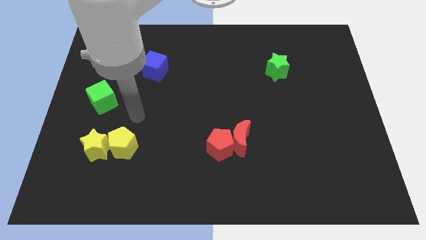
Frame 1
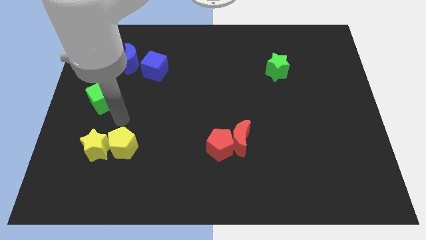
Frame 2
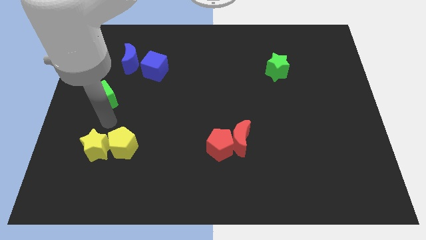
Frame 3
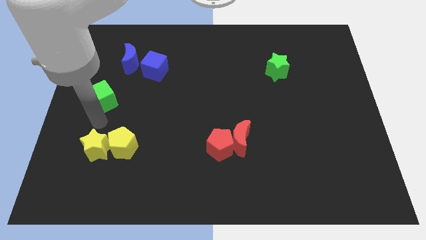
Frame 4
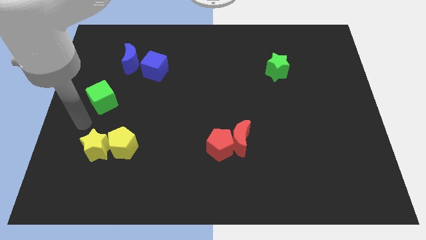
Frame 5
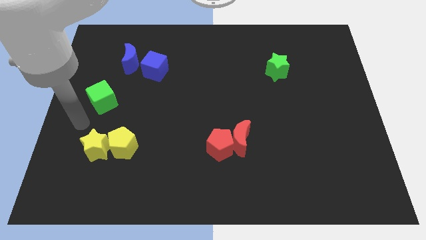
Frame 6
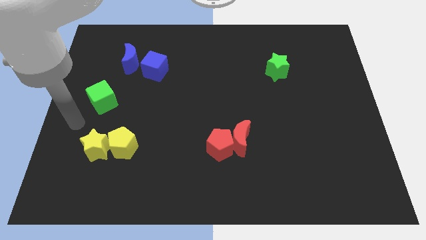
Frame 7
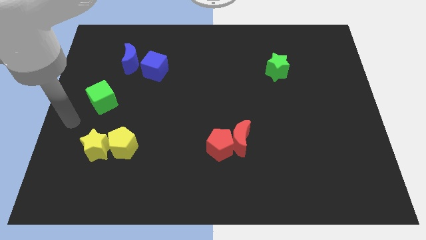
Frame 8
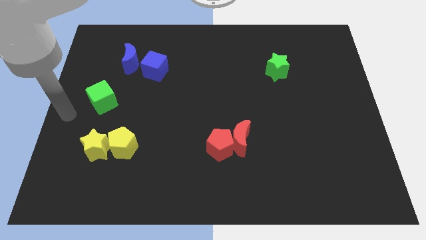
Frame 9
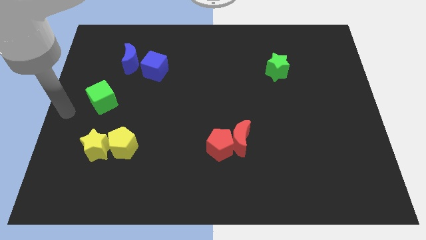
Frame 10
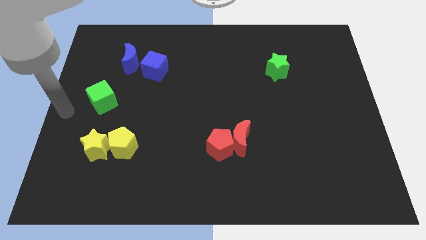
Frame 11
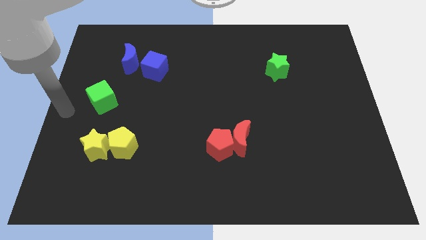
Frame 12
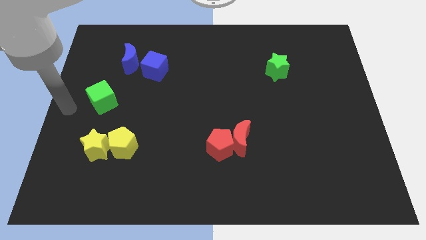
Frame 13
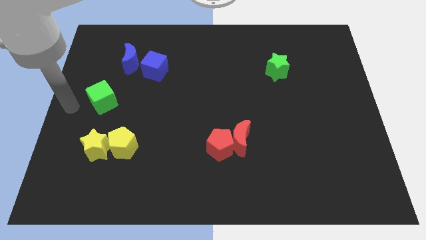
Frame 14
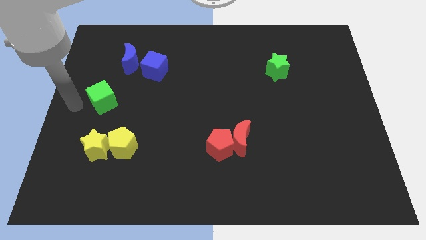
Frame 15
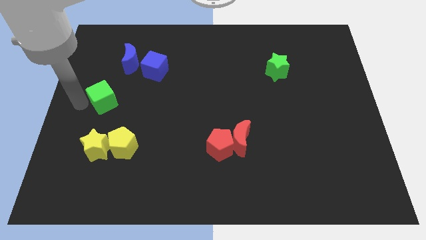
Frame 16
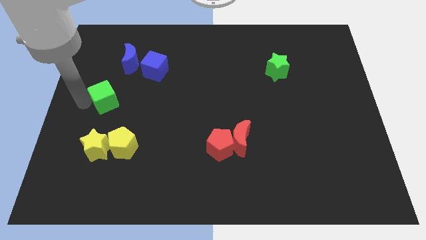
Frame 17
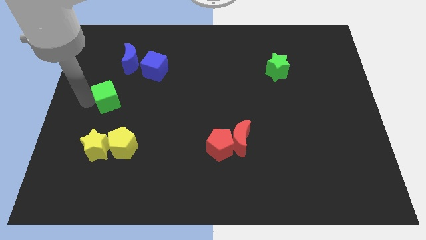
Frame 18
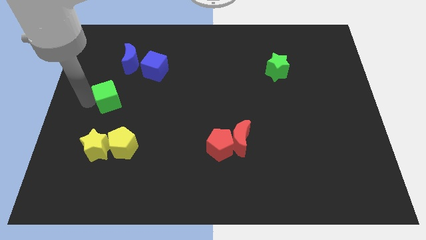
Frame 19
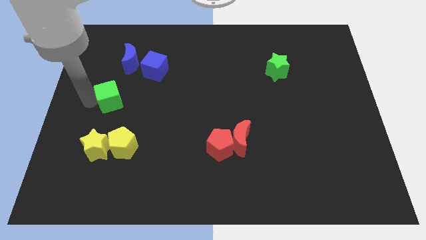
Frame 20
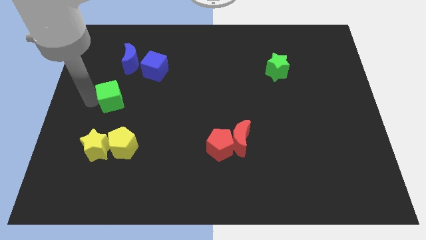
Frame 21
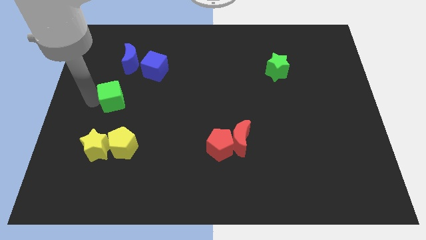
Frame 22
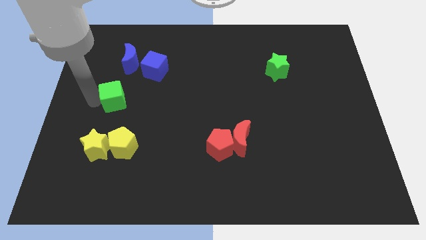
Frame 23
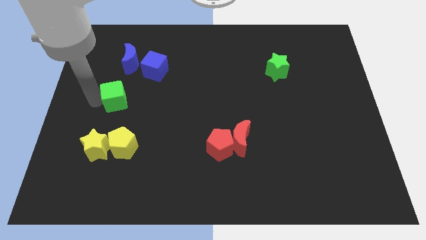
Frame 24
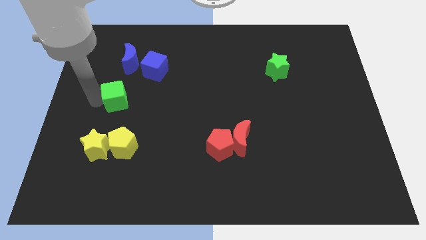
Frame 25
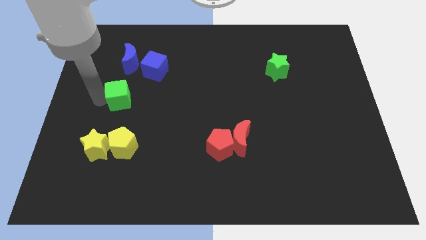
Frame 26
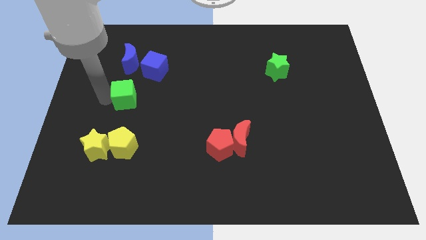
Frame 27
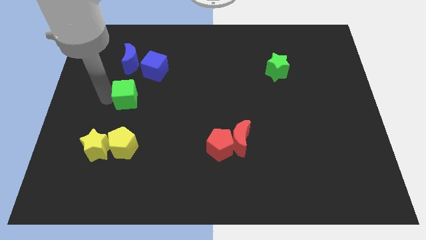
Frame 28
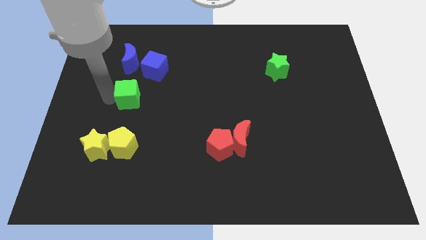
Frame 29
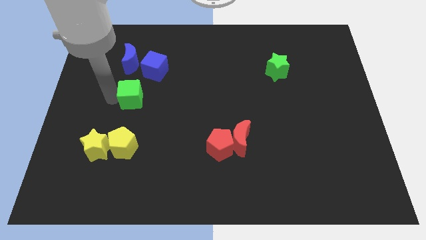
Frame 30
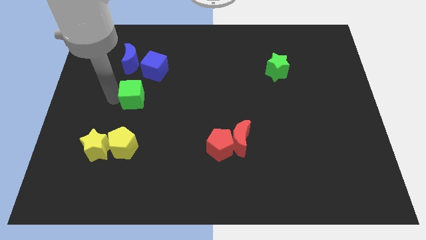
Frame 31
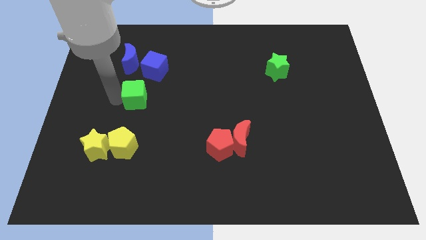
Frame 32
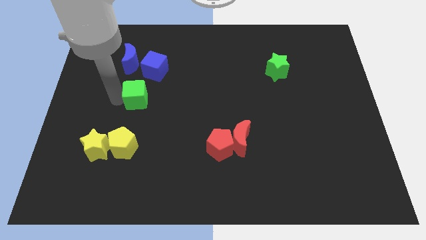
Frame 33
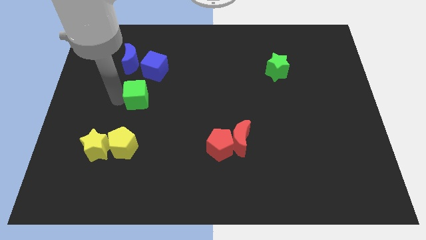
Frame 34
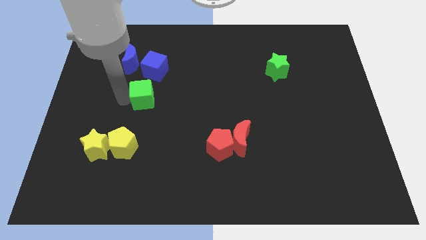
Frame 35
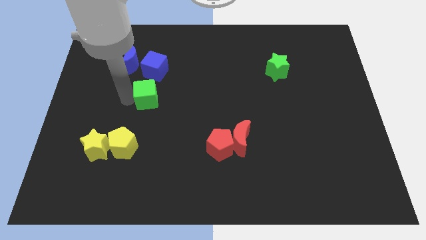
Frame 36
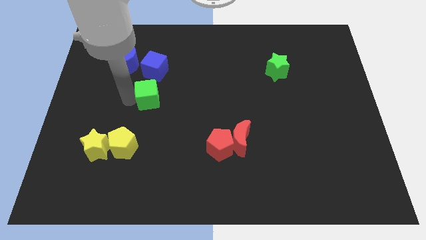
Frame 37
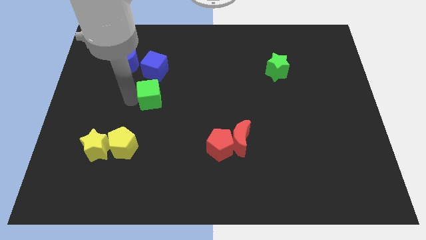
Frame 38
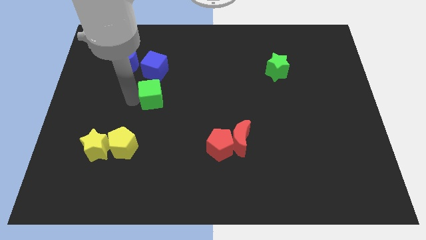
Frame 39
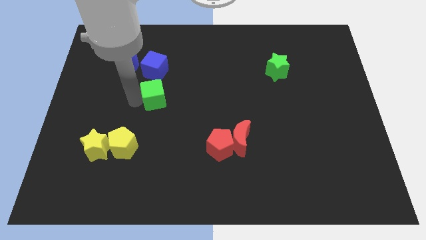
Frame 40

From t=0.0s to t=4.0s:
slide the green cube towards the centre of the board

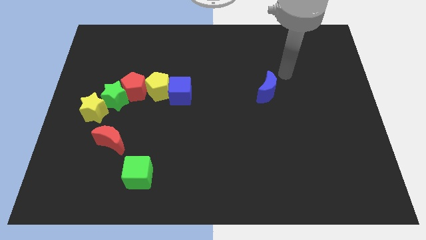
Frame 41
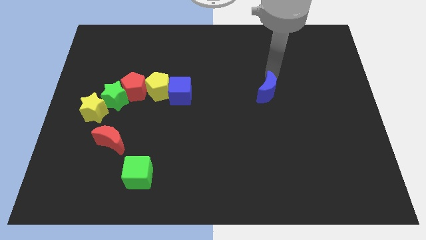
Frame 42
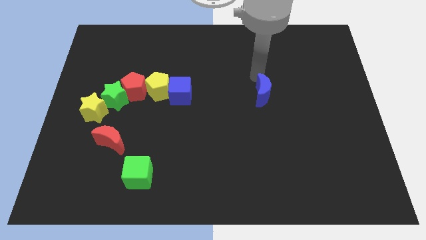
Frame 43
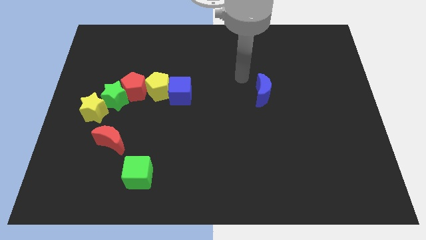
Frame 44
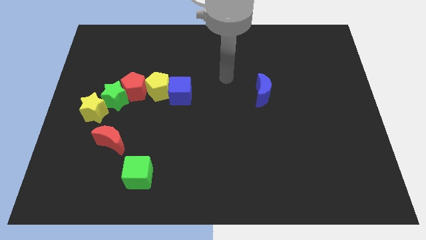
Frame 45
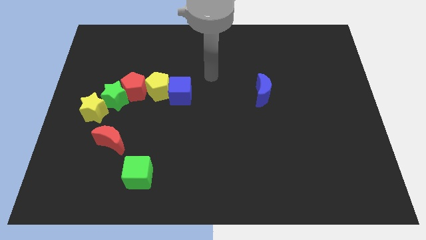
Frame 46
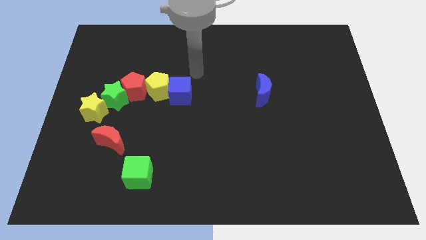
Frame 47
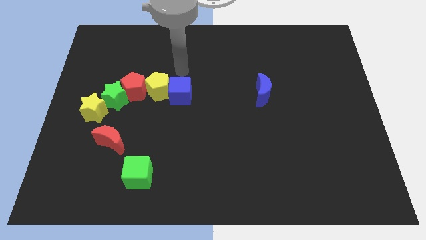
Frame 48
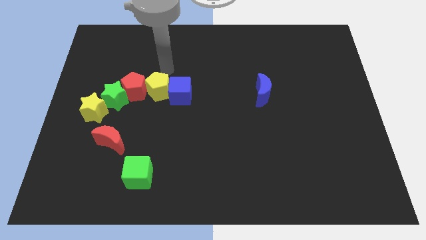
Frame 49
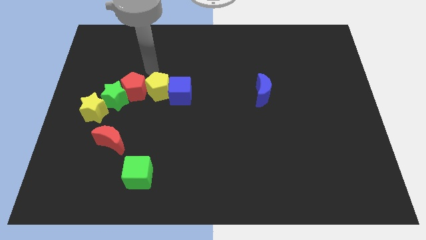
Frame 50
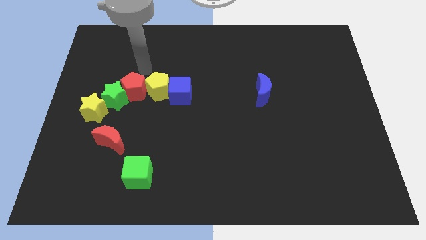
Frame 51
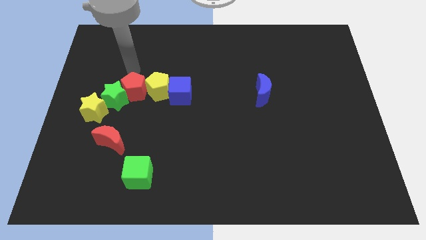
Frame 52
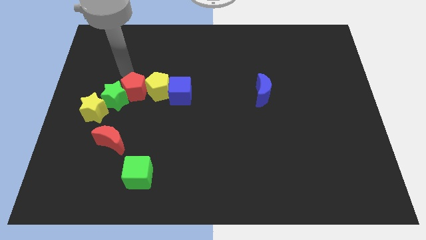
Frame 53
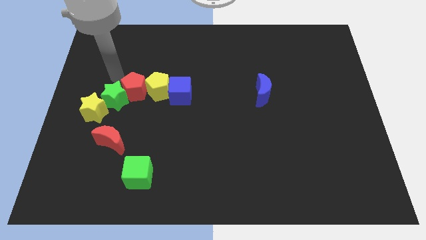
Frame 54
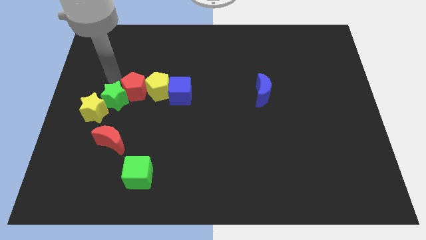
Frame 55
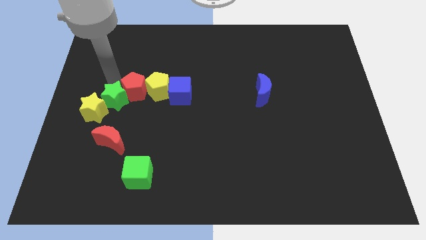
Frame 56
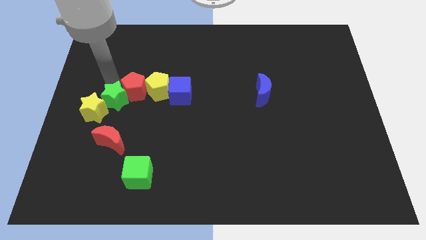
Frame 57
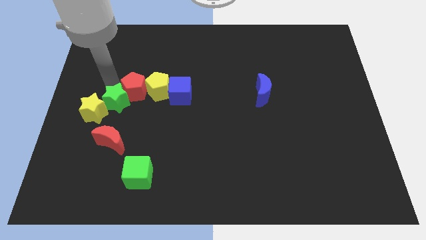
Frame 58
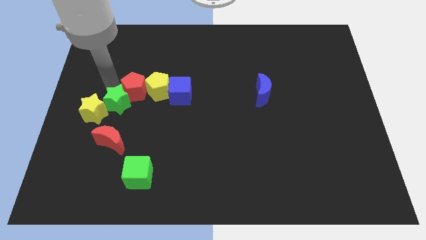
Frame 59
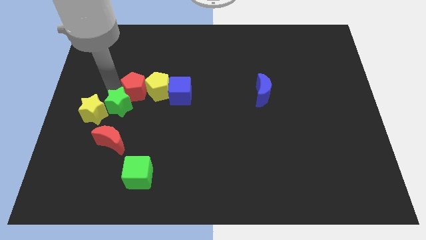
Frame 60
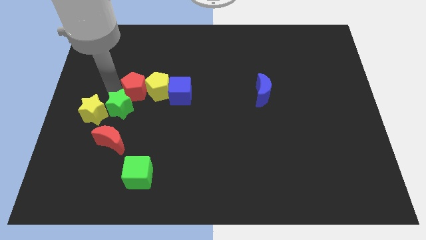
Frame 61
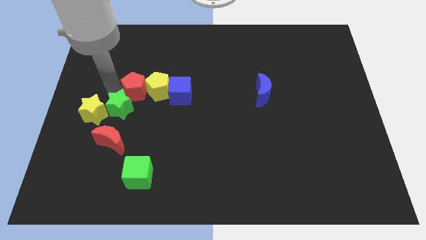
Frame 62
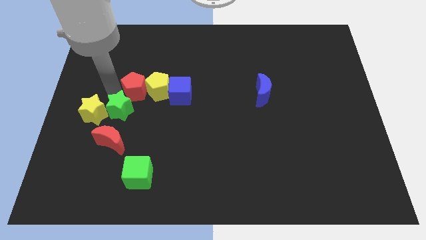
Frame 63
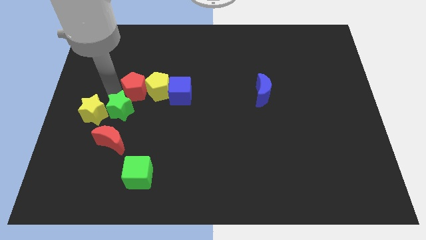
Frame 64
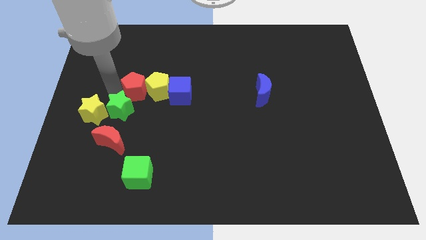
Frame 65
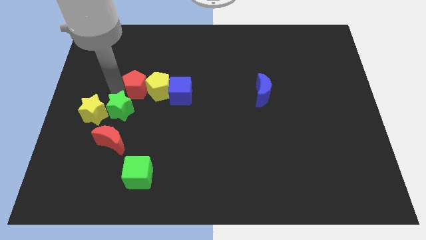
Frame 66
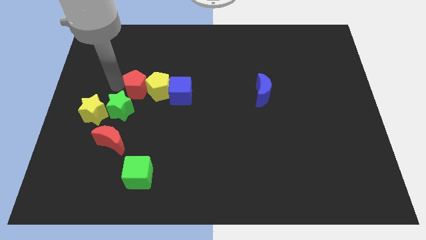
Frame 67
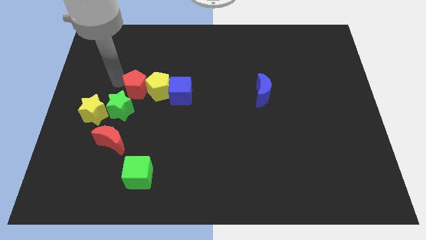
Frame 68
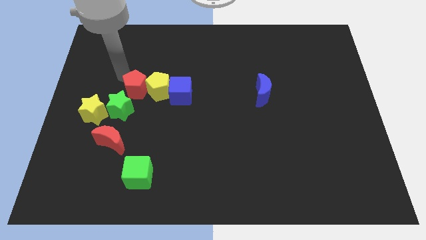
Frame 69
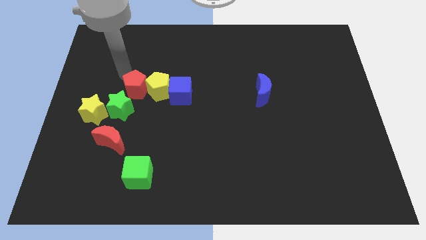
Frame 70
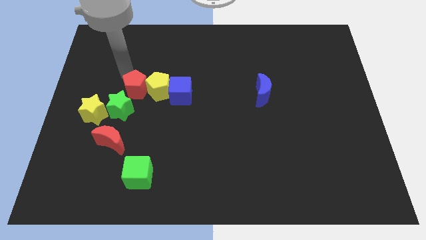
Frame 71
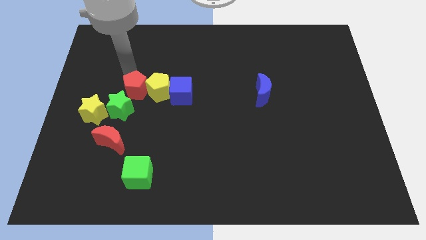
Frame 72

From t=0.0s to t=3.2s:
move the green star to the bottom left of the red pentagon

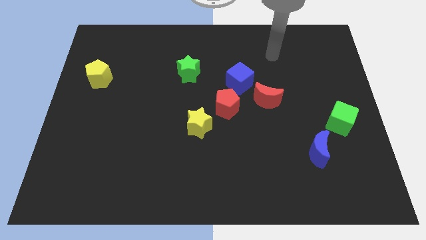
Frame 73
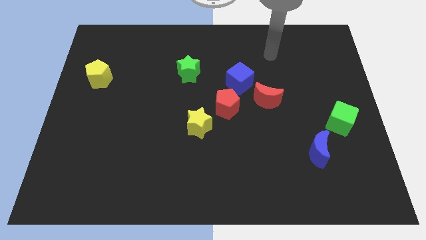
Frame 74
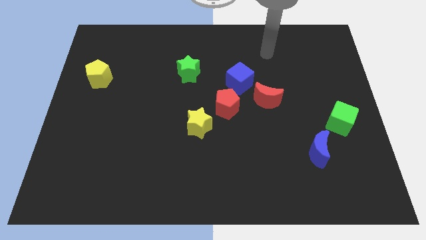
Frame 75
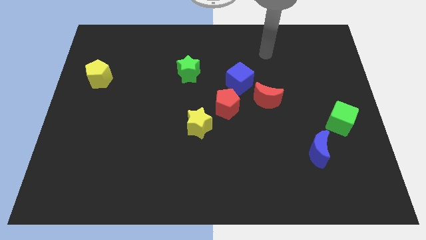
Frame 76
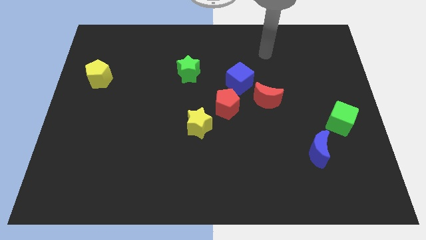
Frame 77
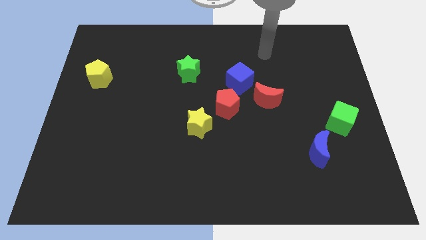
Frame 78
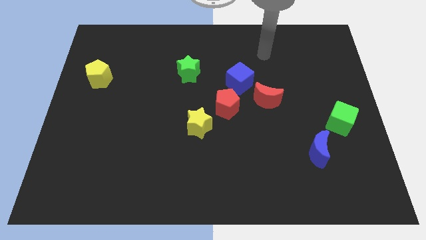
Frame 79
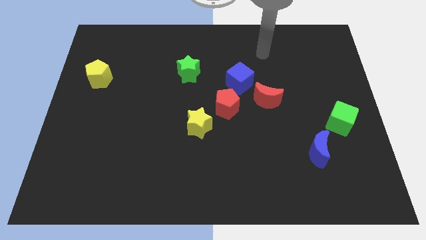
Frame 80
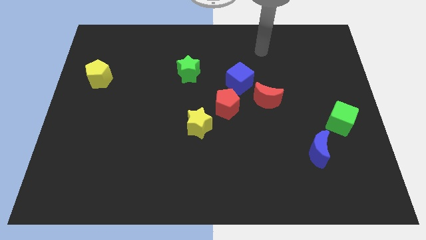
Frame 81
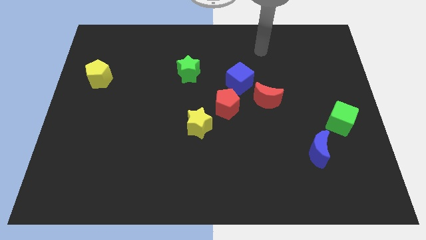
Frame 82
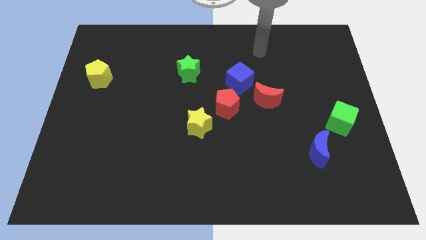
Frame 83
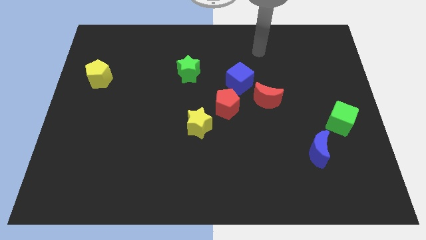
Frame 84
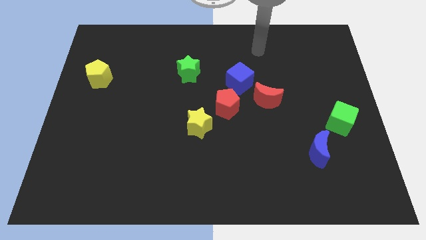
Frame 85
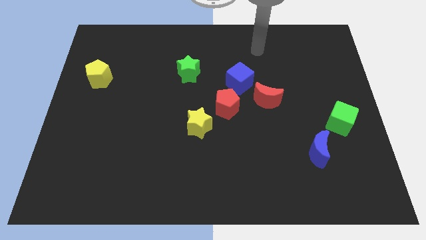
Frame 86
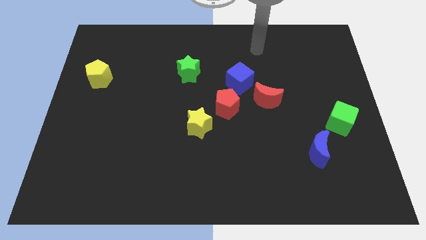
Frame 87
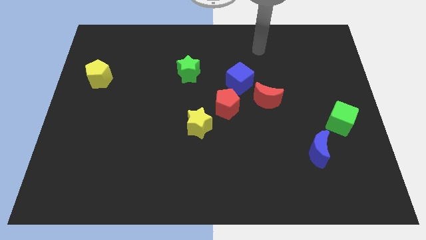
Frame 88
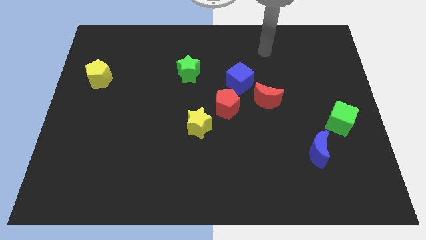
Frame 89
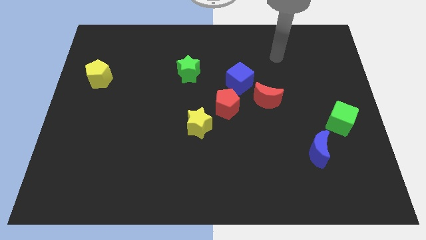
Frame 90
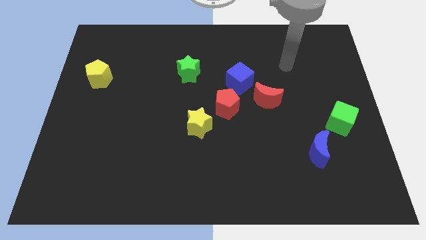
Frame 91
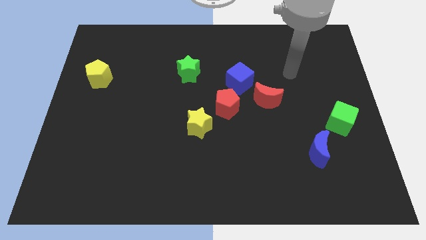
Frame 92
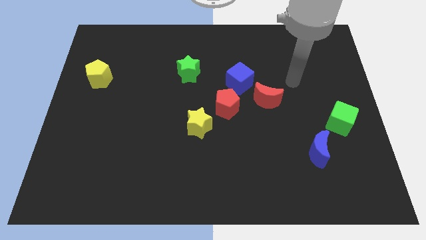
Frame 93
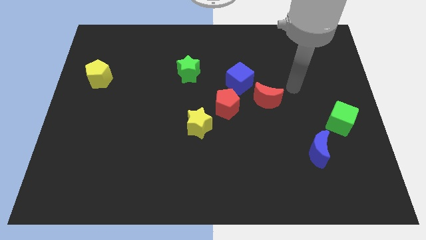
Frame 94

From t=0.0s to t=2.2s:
move your arm towards the bottom side of the board
